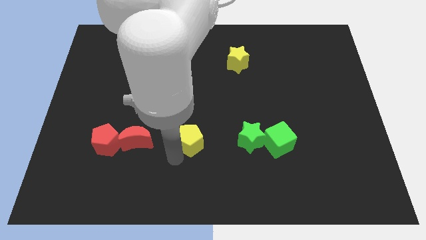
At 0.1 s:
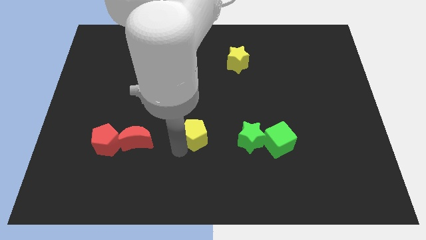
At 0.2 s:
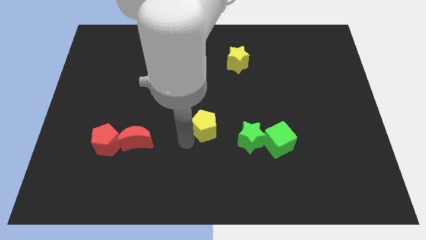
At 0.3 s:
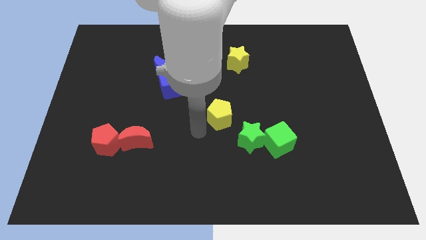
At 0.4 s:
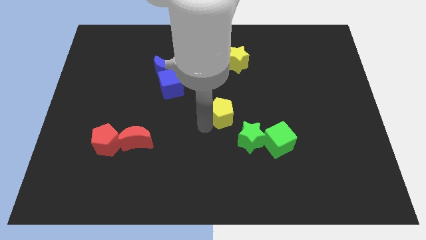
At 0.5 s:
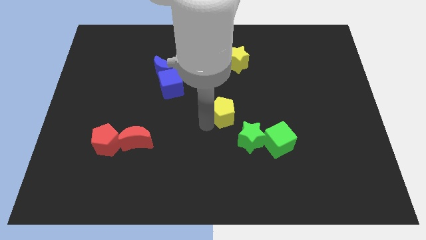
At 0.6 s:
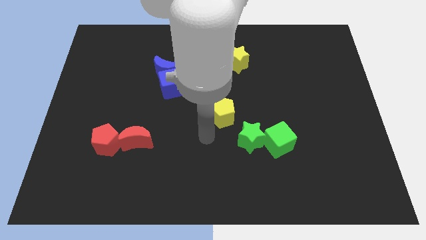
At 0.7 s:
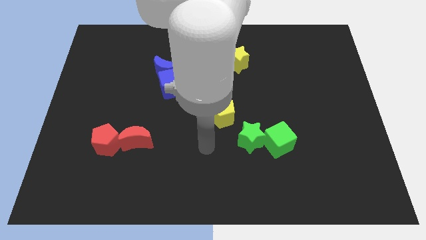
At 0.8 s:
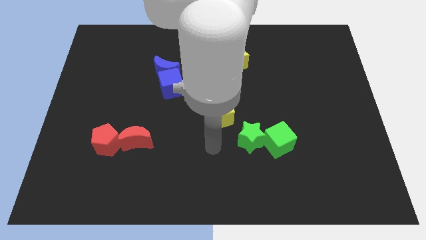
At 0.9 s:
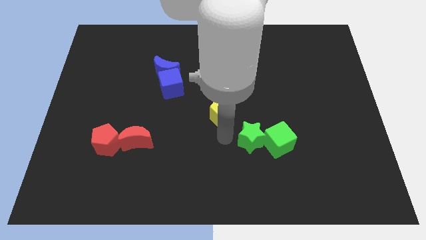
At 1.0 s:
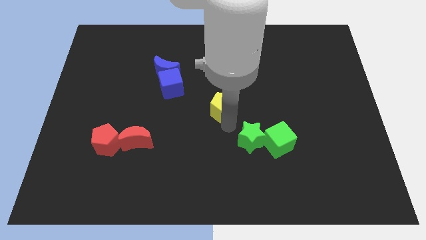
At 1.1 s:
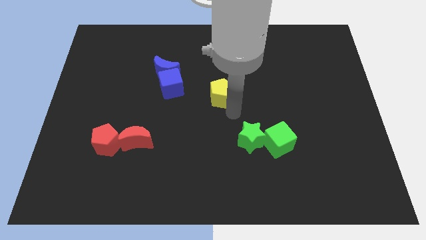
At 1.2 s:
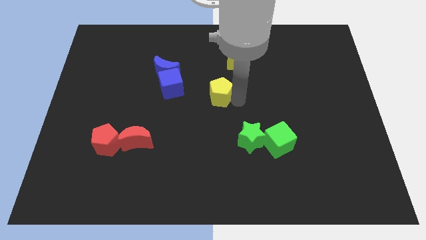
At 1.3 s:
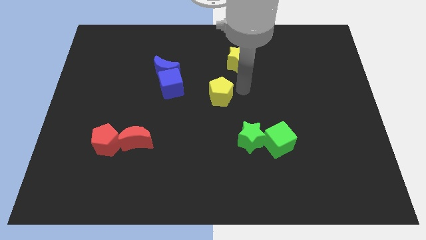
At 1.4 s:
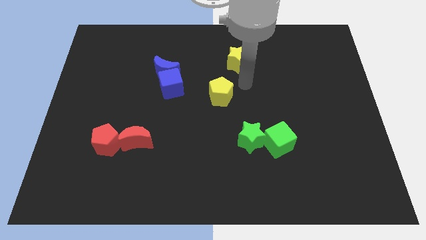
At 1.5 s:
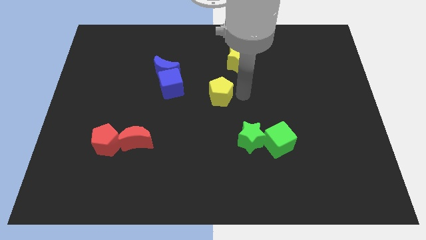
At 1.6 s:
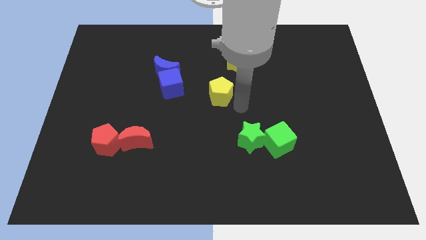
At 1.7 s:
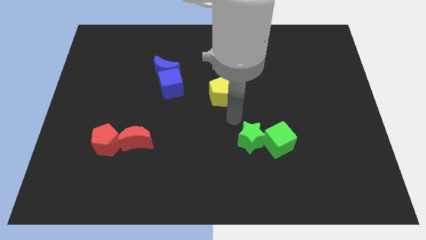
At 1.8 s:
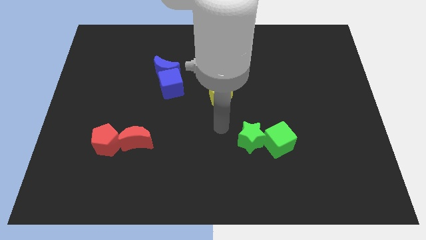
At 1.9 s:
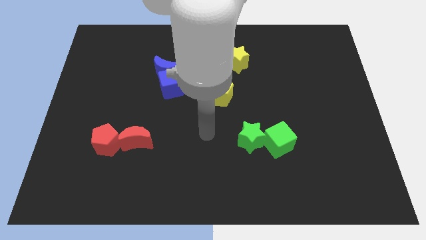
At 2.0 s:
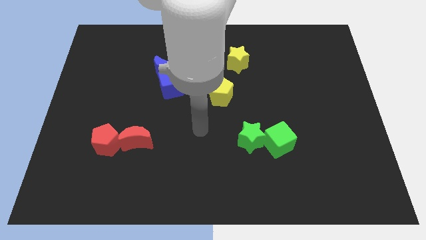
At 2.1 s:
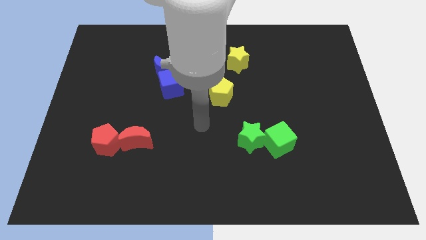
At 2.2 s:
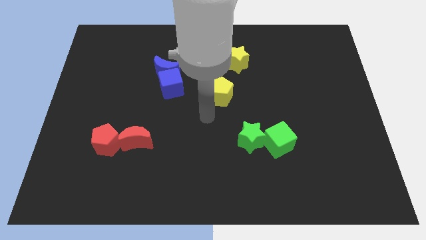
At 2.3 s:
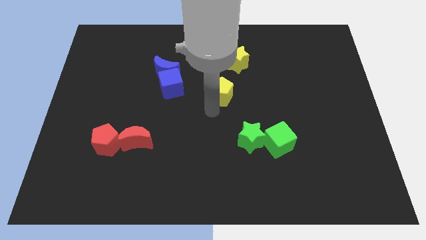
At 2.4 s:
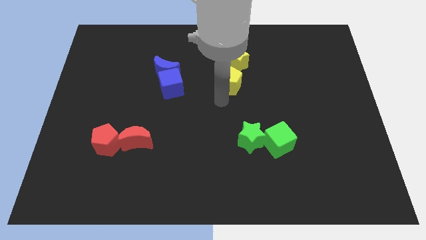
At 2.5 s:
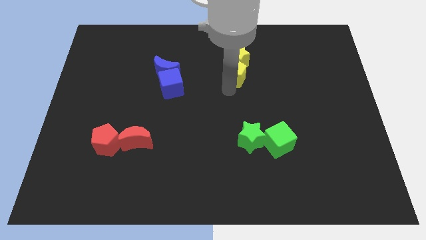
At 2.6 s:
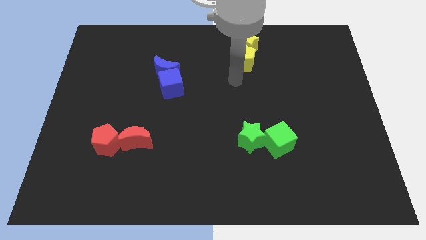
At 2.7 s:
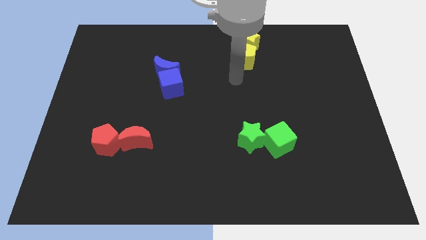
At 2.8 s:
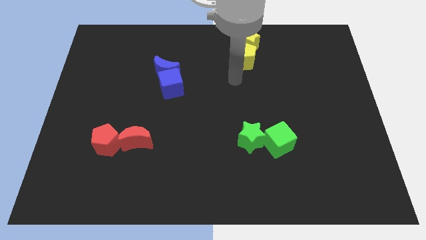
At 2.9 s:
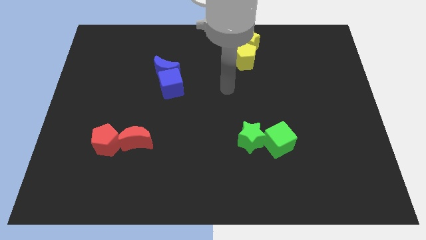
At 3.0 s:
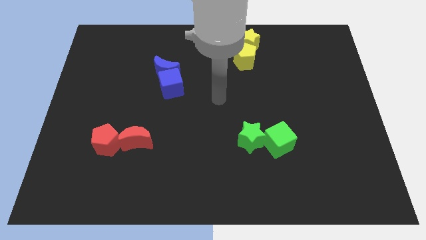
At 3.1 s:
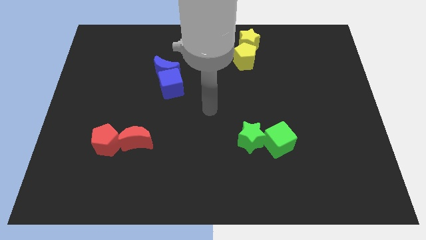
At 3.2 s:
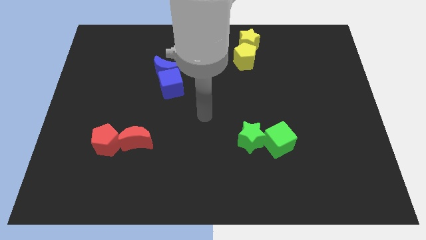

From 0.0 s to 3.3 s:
push the yellow pentagon into the yellow star

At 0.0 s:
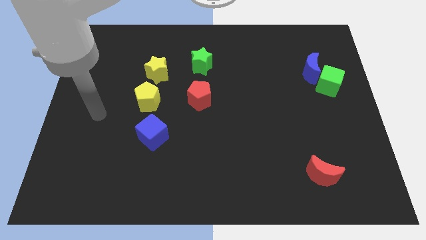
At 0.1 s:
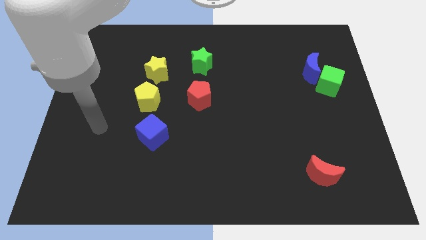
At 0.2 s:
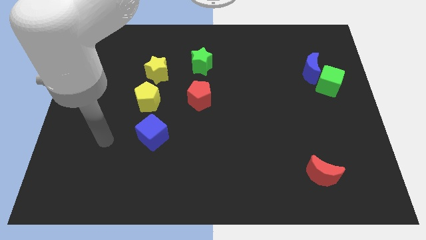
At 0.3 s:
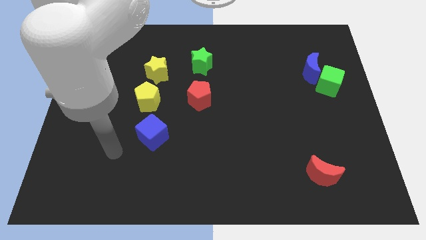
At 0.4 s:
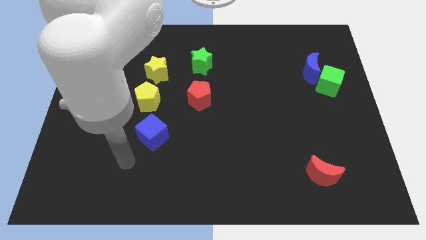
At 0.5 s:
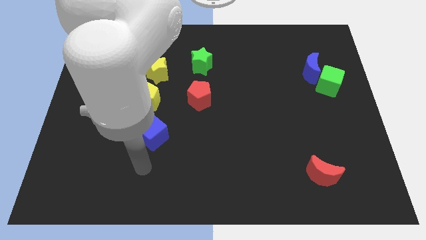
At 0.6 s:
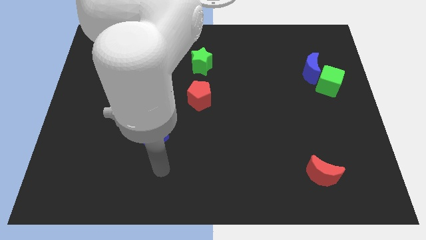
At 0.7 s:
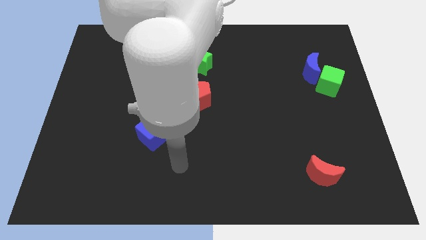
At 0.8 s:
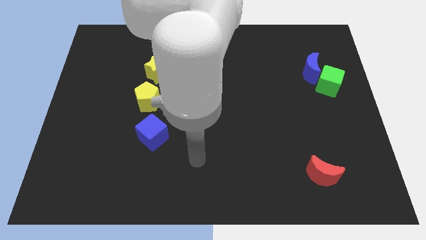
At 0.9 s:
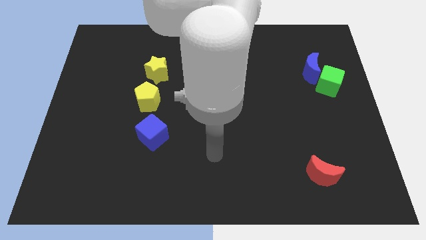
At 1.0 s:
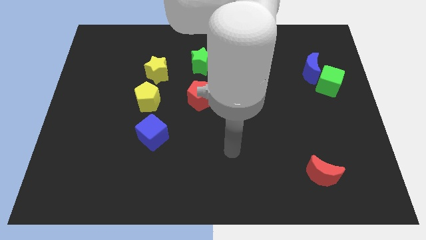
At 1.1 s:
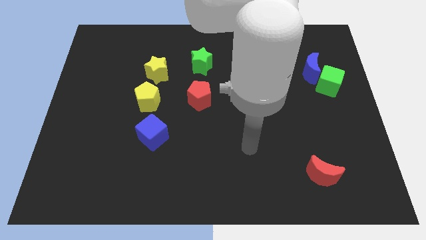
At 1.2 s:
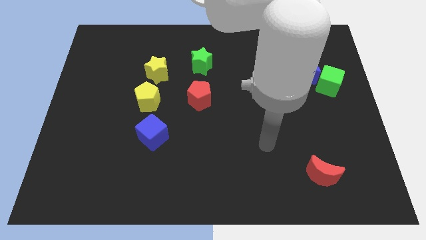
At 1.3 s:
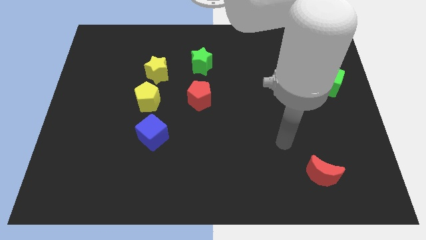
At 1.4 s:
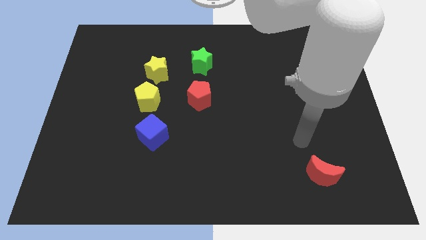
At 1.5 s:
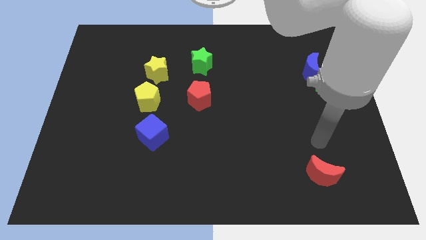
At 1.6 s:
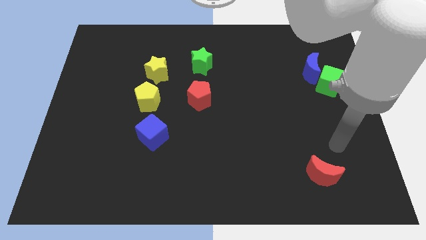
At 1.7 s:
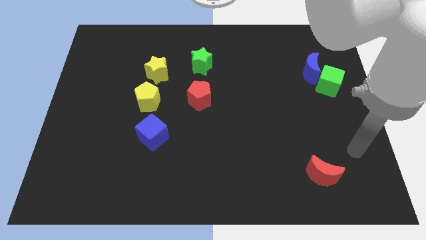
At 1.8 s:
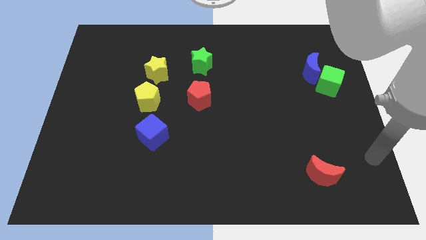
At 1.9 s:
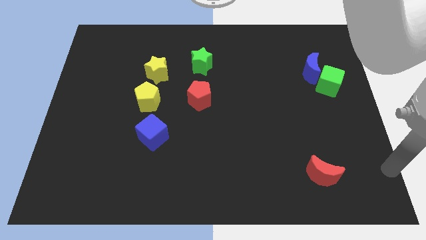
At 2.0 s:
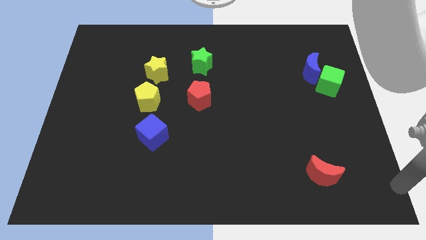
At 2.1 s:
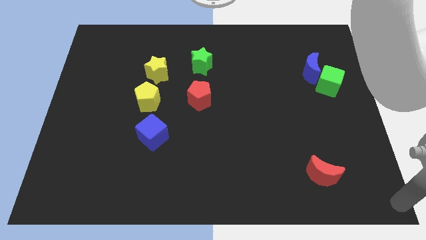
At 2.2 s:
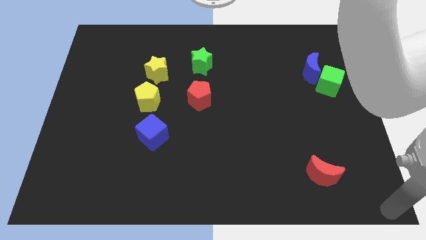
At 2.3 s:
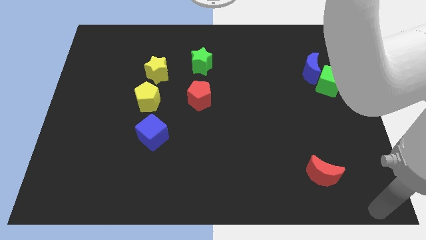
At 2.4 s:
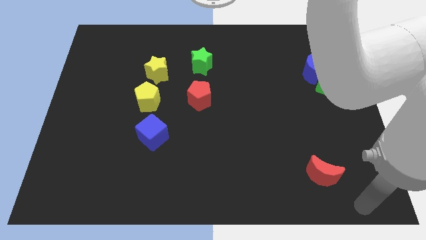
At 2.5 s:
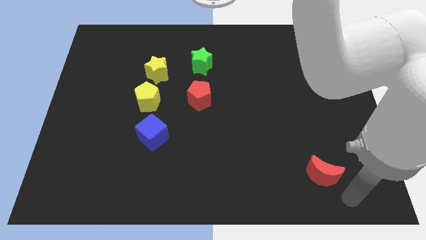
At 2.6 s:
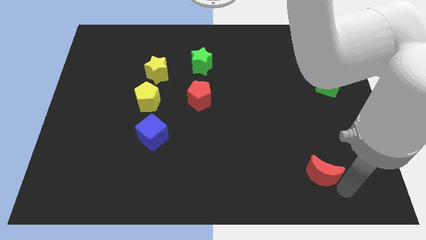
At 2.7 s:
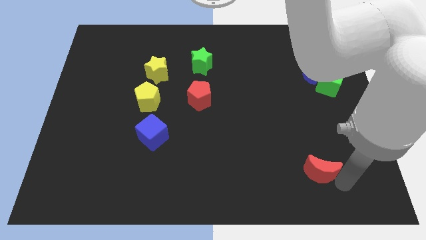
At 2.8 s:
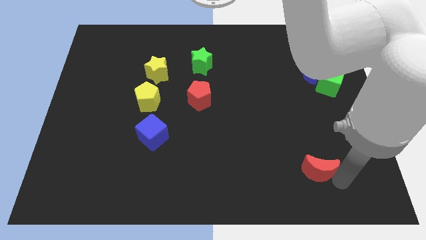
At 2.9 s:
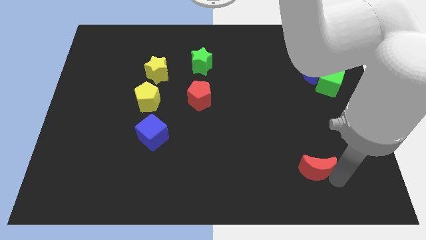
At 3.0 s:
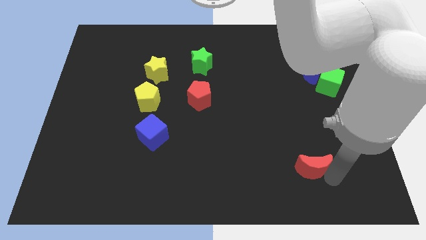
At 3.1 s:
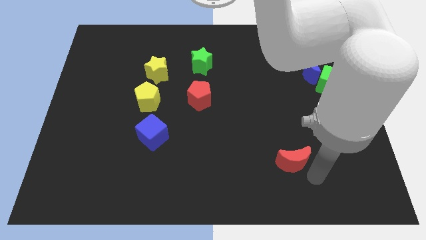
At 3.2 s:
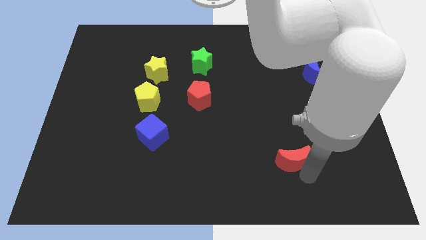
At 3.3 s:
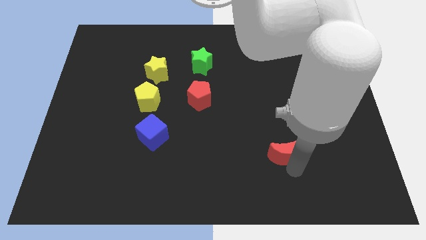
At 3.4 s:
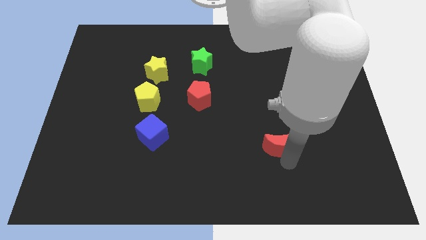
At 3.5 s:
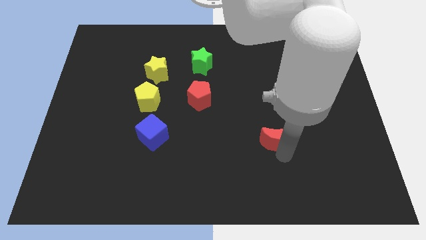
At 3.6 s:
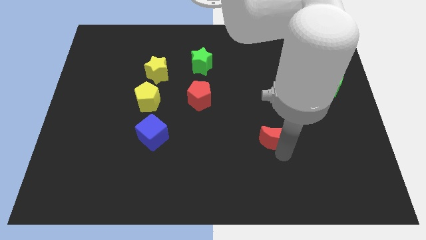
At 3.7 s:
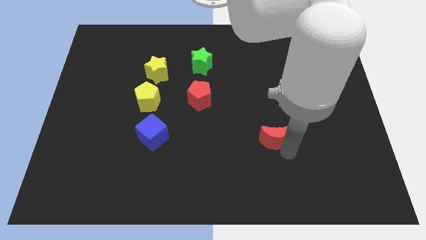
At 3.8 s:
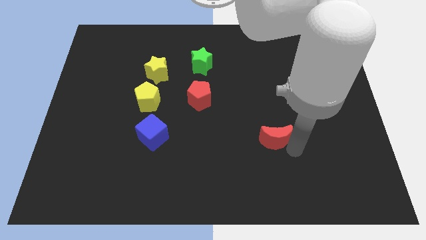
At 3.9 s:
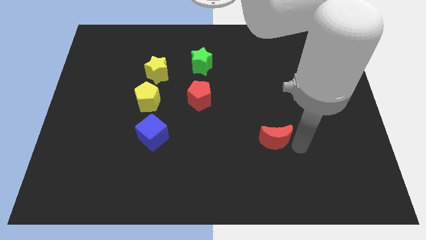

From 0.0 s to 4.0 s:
move the red crescent to the center of the board

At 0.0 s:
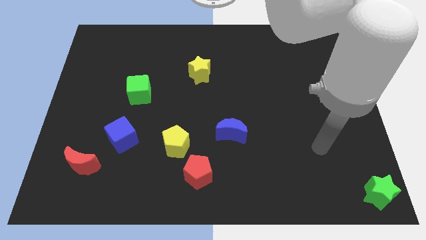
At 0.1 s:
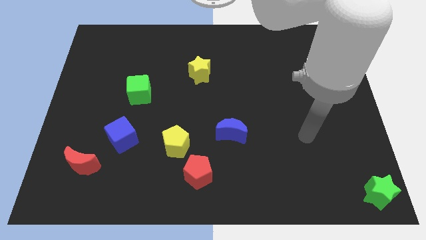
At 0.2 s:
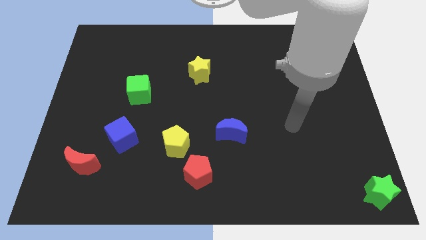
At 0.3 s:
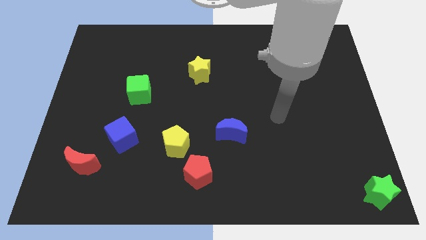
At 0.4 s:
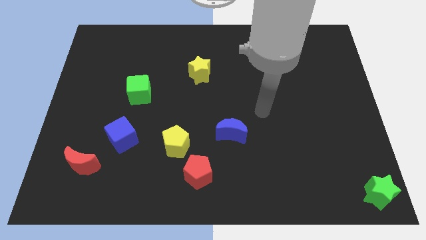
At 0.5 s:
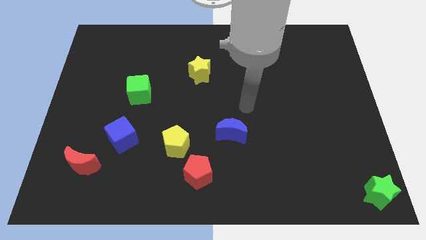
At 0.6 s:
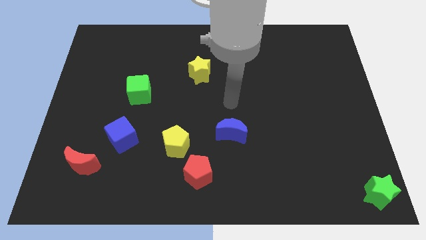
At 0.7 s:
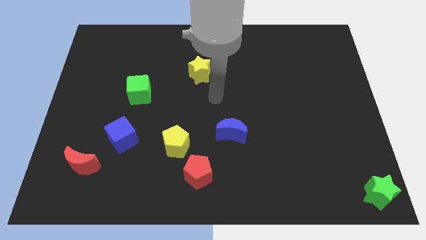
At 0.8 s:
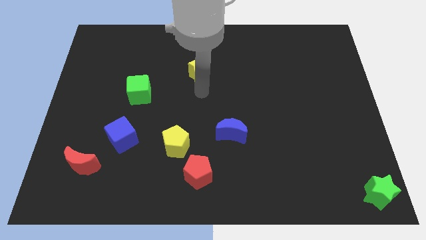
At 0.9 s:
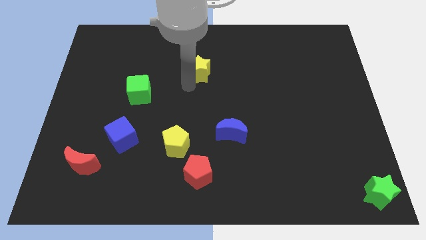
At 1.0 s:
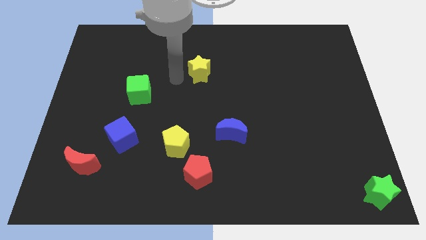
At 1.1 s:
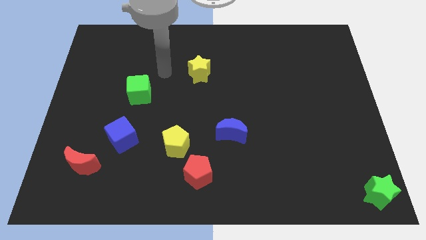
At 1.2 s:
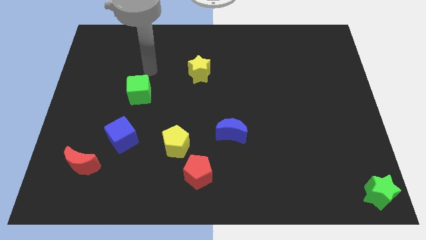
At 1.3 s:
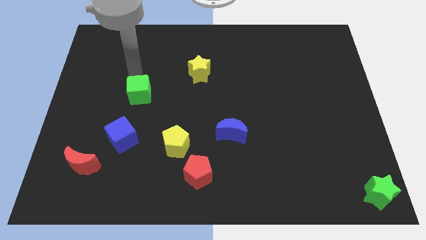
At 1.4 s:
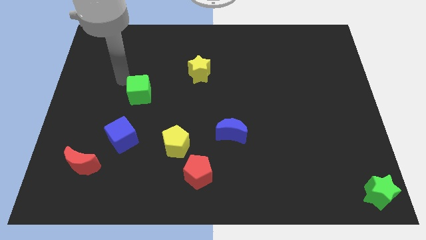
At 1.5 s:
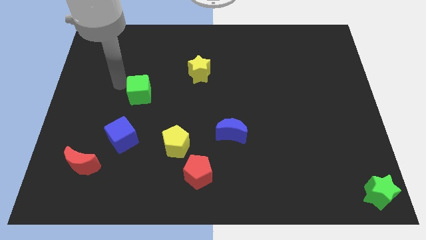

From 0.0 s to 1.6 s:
move your arm on top left of the green cube
